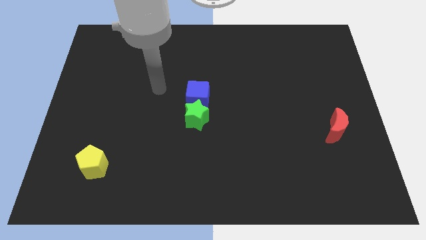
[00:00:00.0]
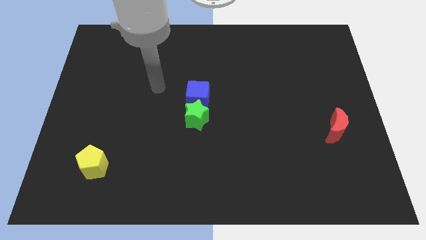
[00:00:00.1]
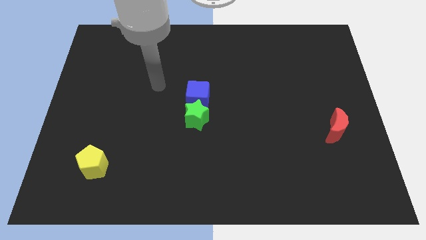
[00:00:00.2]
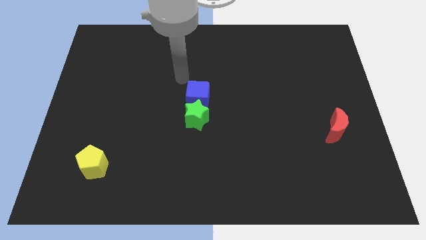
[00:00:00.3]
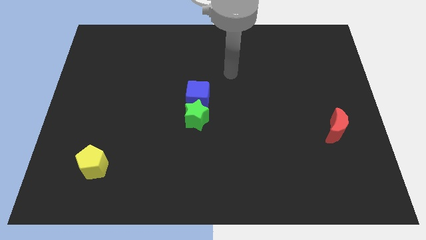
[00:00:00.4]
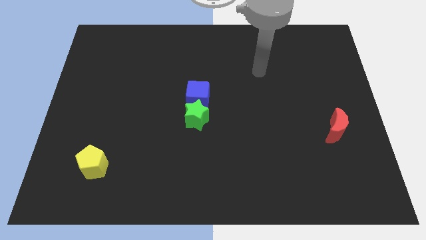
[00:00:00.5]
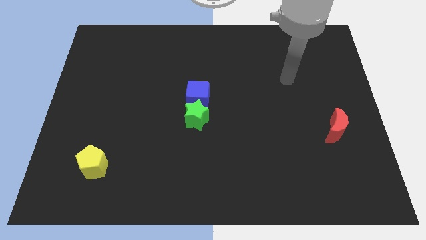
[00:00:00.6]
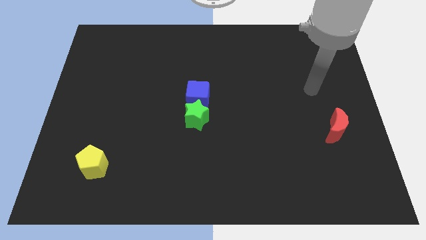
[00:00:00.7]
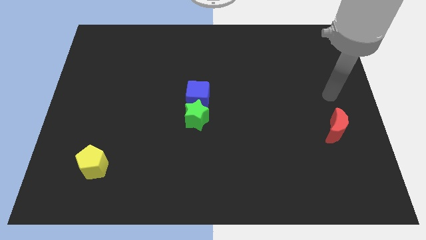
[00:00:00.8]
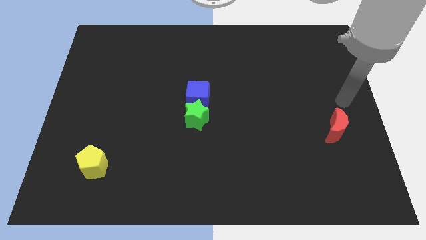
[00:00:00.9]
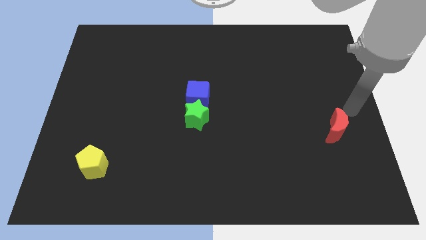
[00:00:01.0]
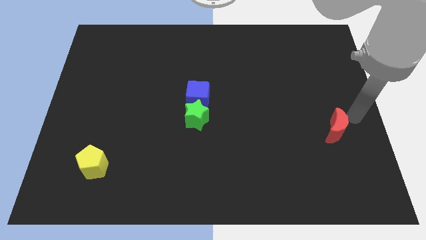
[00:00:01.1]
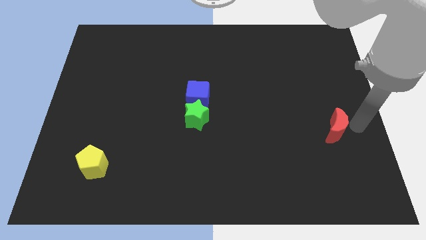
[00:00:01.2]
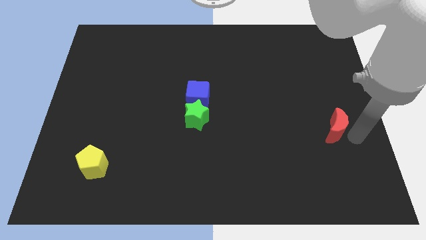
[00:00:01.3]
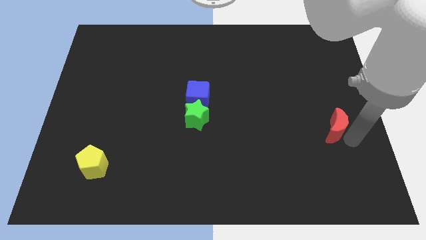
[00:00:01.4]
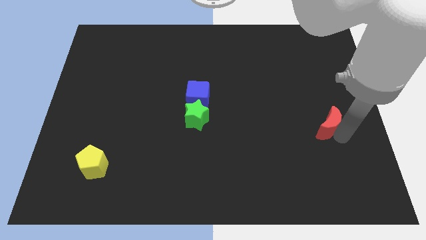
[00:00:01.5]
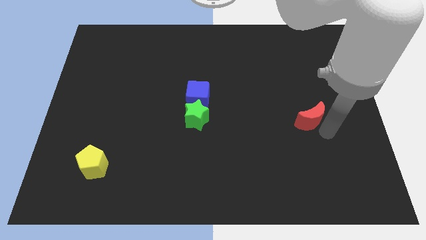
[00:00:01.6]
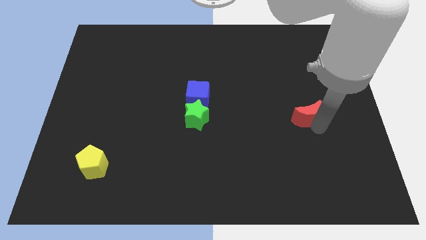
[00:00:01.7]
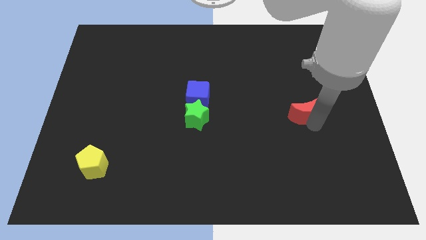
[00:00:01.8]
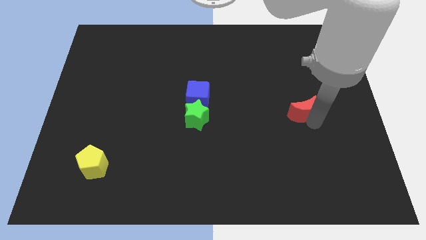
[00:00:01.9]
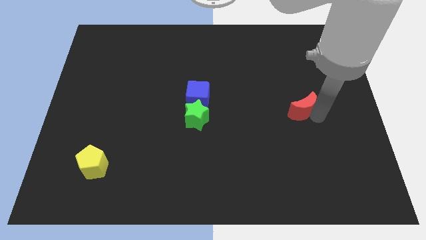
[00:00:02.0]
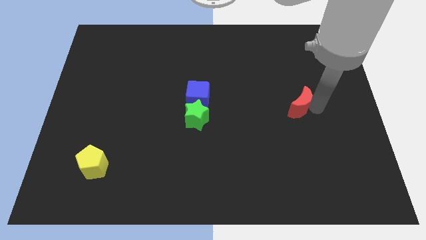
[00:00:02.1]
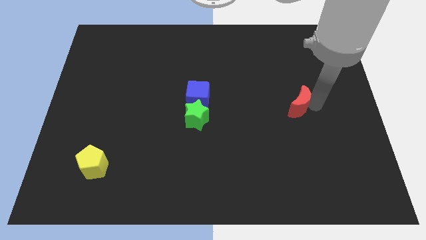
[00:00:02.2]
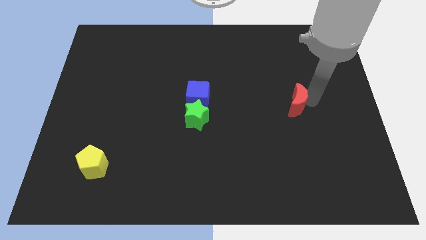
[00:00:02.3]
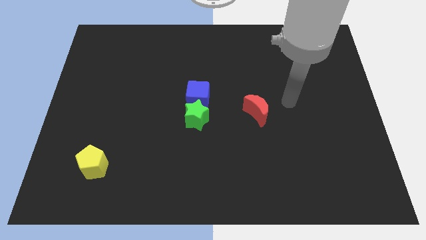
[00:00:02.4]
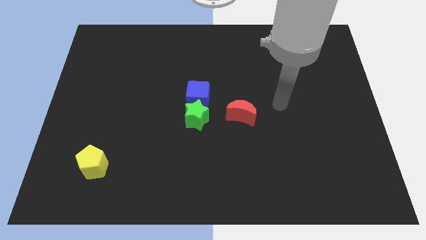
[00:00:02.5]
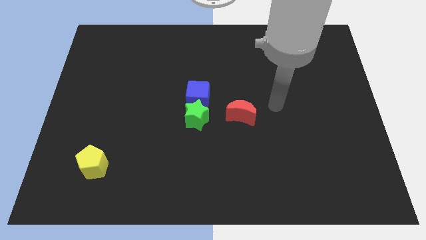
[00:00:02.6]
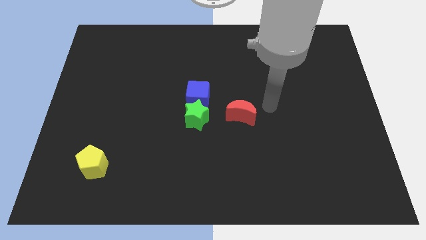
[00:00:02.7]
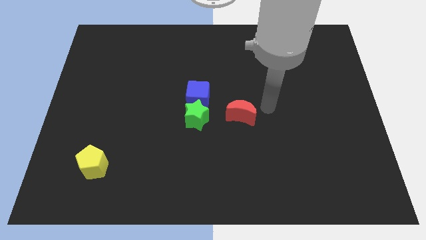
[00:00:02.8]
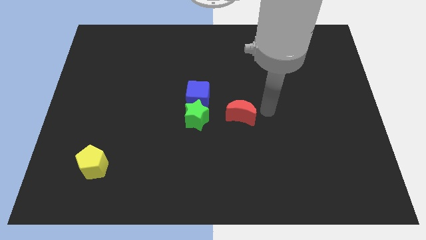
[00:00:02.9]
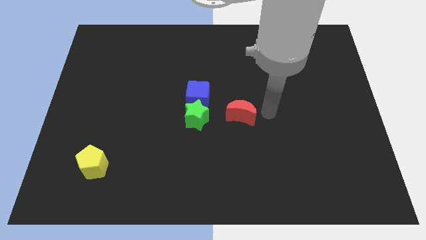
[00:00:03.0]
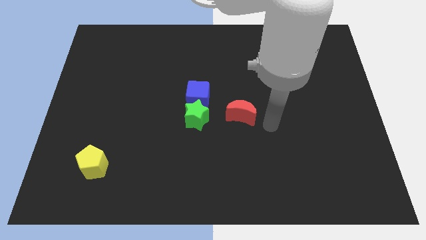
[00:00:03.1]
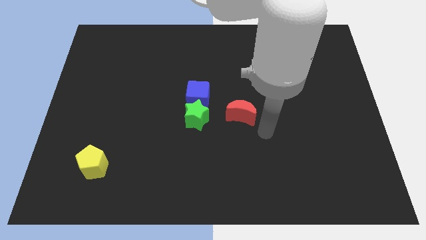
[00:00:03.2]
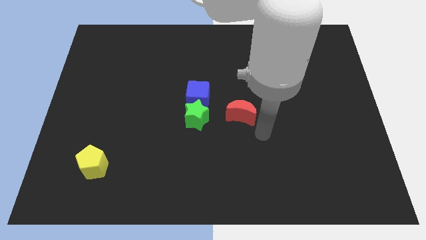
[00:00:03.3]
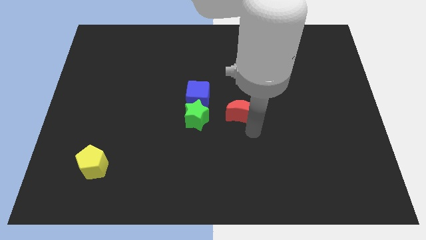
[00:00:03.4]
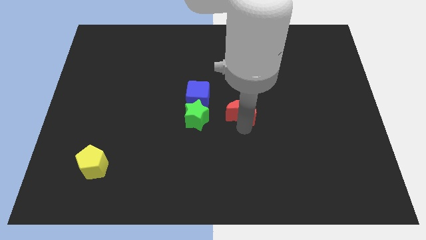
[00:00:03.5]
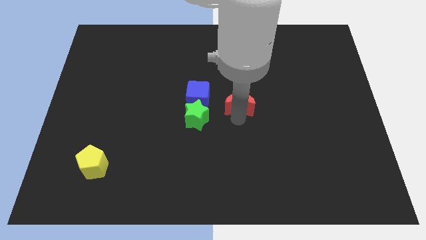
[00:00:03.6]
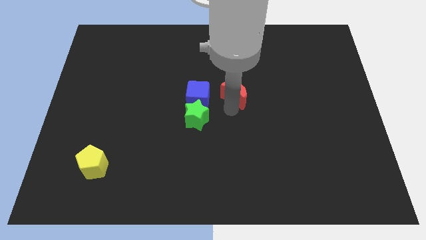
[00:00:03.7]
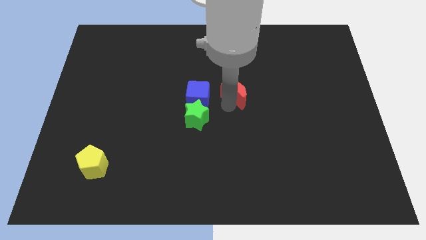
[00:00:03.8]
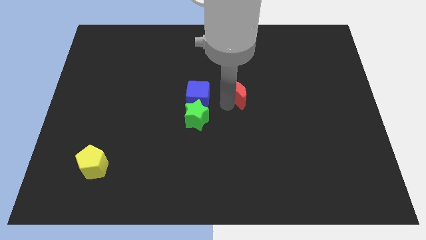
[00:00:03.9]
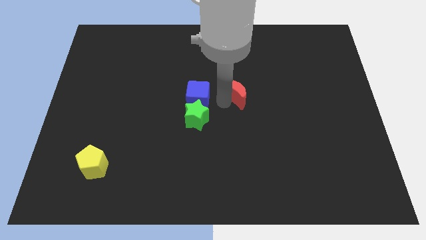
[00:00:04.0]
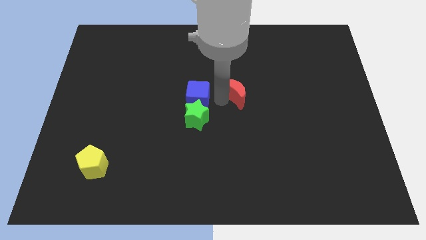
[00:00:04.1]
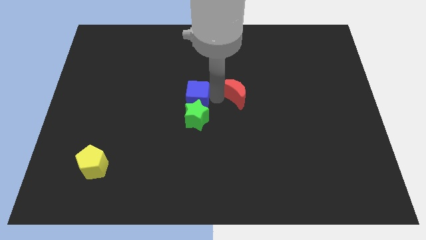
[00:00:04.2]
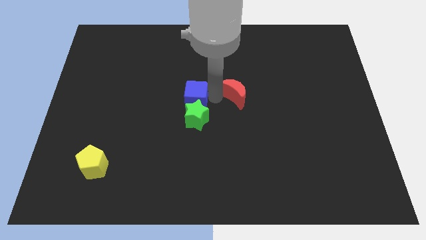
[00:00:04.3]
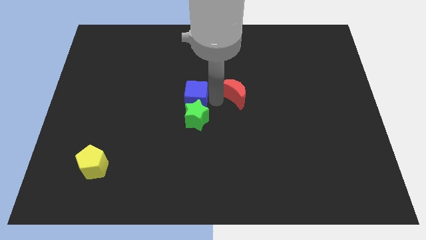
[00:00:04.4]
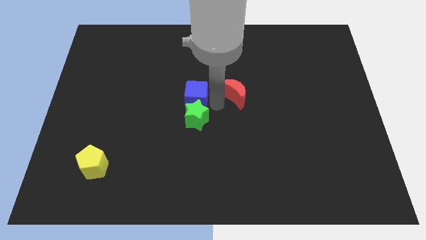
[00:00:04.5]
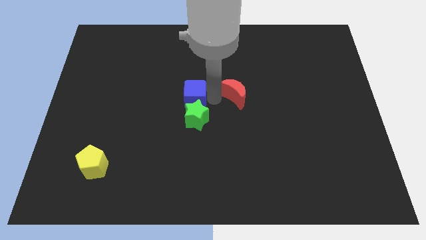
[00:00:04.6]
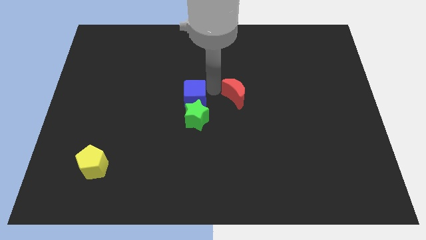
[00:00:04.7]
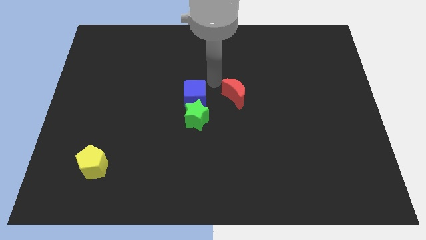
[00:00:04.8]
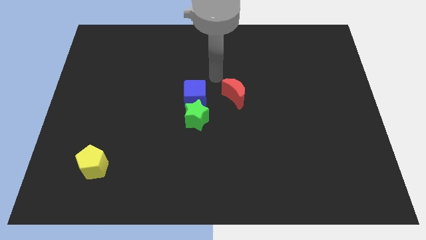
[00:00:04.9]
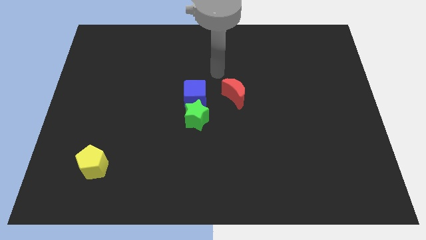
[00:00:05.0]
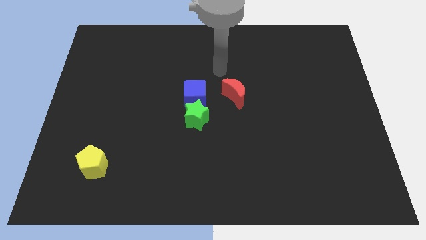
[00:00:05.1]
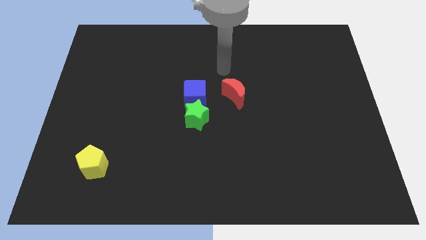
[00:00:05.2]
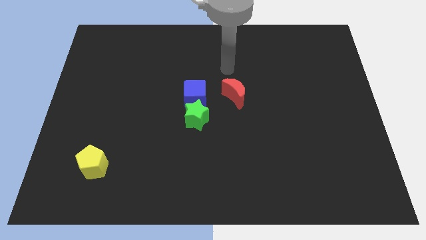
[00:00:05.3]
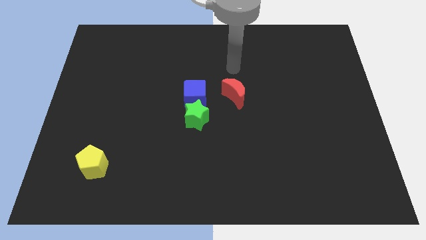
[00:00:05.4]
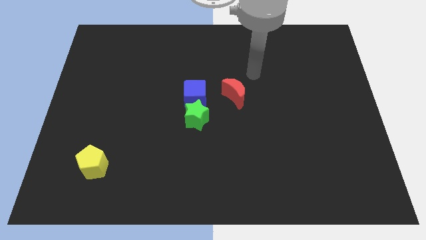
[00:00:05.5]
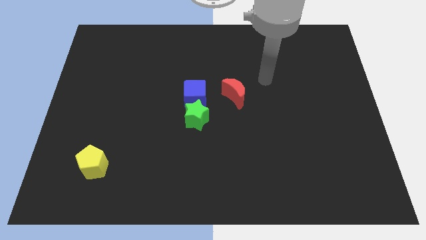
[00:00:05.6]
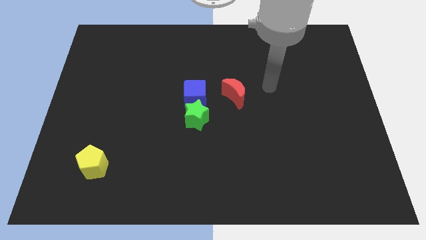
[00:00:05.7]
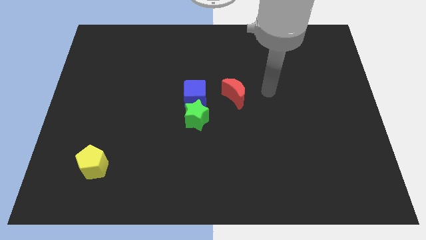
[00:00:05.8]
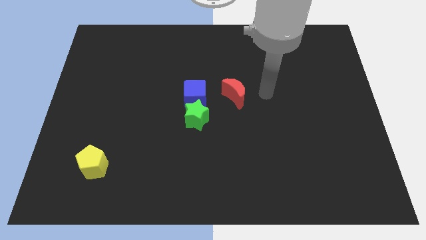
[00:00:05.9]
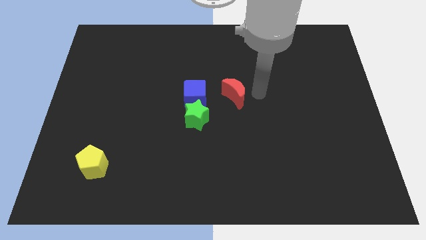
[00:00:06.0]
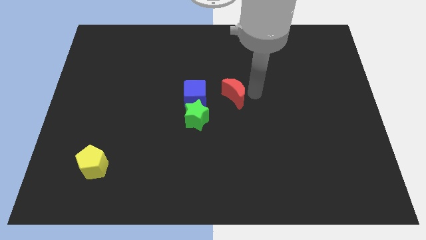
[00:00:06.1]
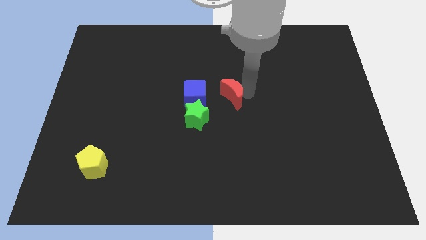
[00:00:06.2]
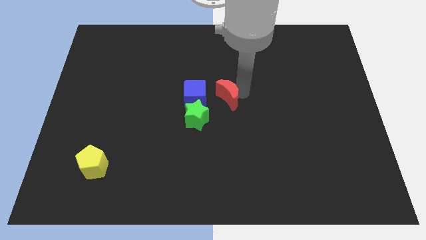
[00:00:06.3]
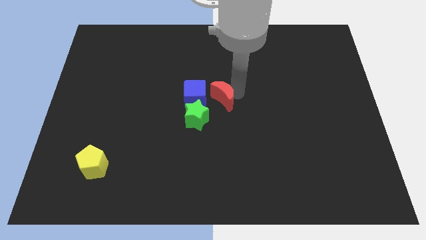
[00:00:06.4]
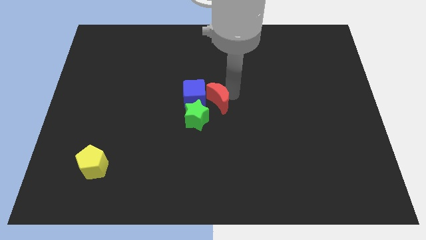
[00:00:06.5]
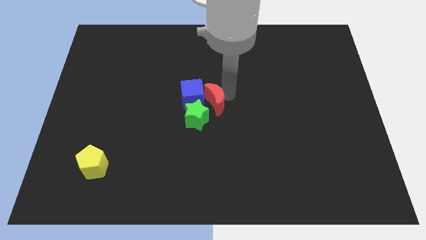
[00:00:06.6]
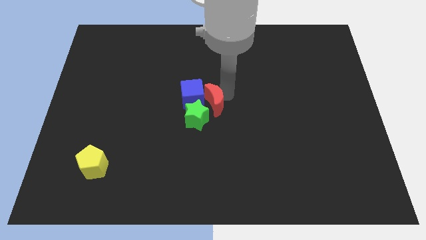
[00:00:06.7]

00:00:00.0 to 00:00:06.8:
move the red block to the cube

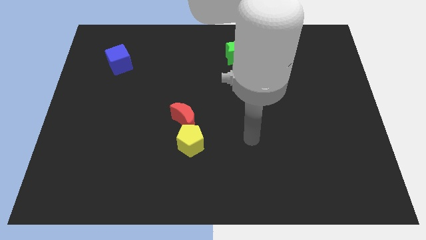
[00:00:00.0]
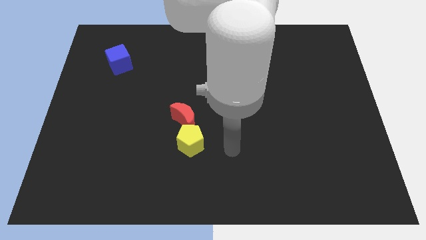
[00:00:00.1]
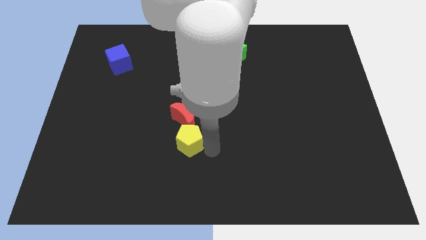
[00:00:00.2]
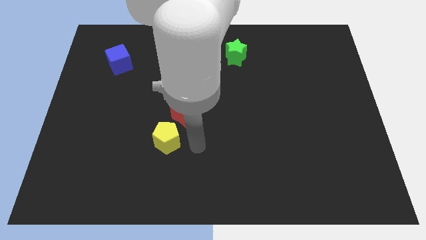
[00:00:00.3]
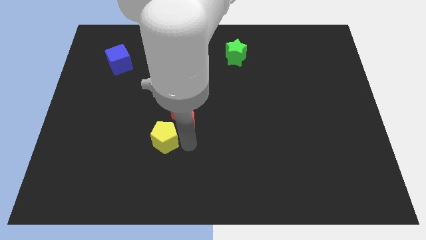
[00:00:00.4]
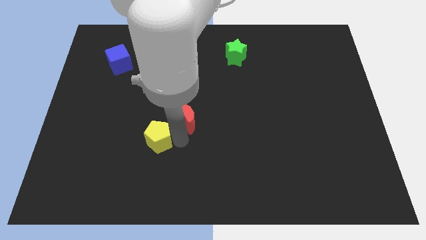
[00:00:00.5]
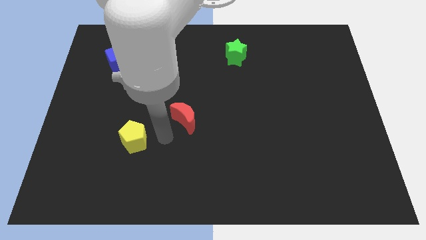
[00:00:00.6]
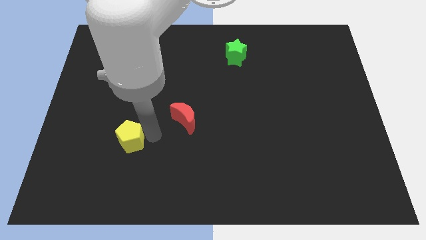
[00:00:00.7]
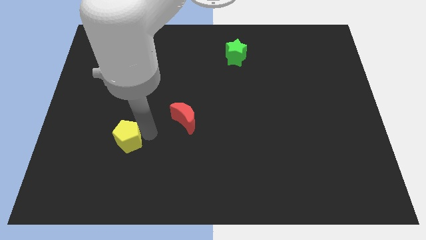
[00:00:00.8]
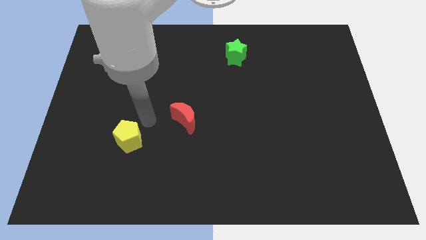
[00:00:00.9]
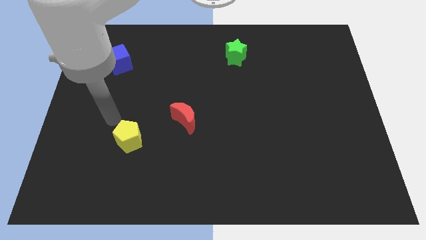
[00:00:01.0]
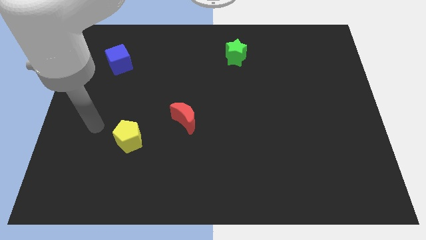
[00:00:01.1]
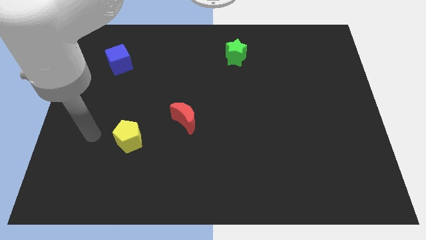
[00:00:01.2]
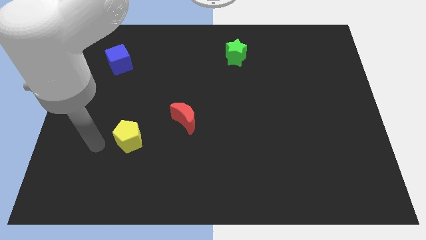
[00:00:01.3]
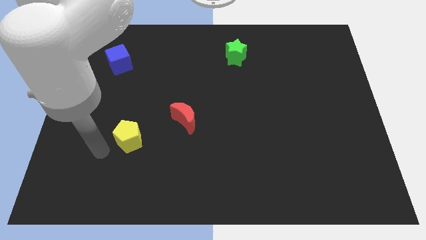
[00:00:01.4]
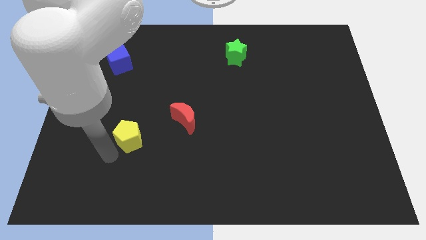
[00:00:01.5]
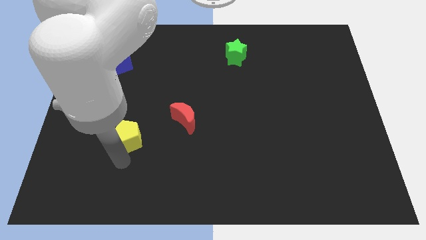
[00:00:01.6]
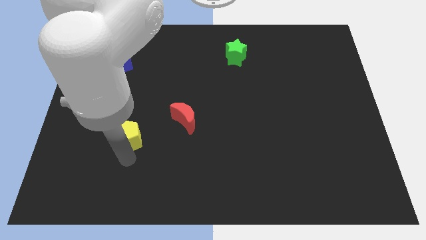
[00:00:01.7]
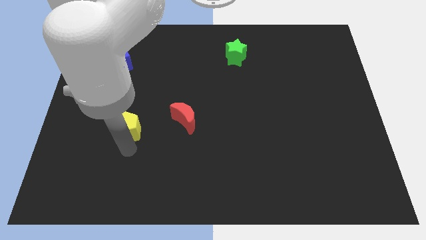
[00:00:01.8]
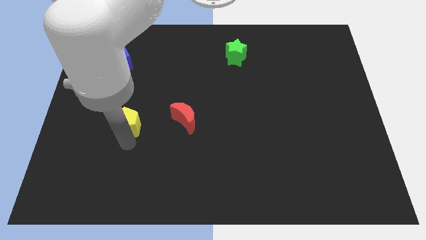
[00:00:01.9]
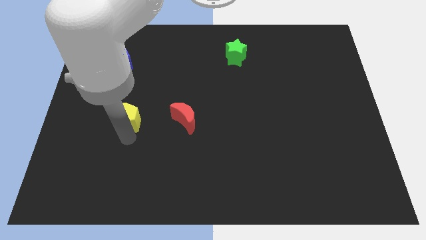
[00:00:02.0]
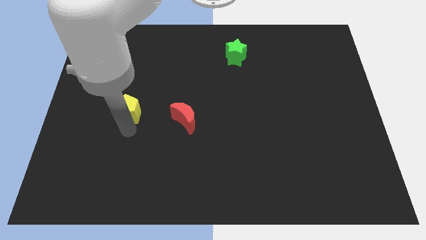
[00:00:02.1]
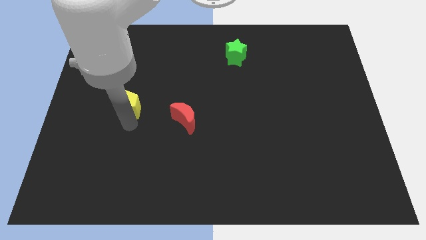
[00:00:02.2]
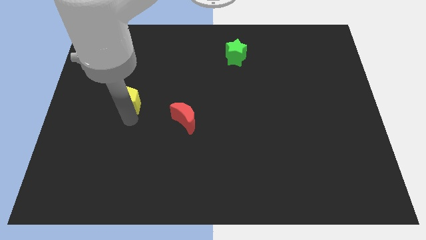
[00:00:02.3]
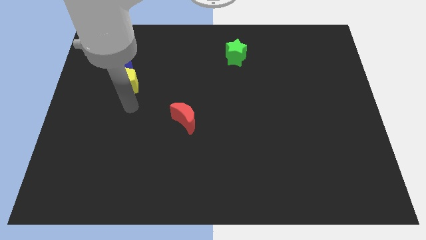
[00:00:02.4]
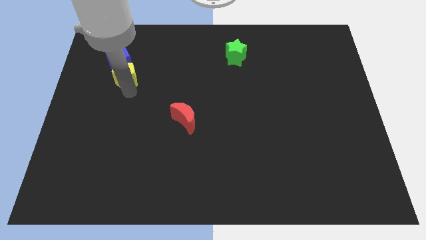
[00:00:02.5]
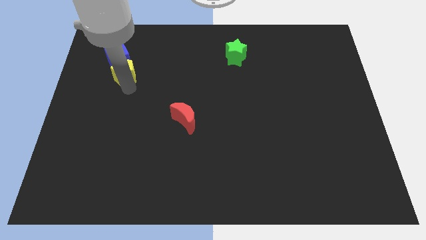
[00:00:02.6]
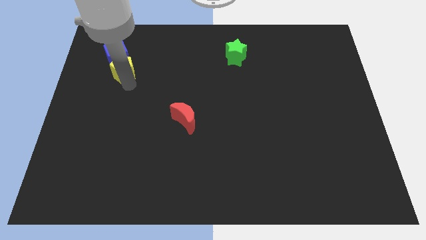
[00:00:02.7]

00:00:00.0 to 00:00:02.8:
put the yellow pentagon to the blue cube
